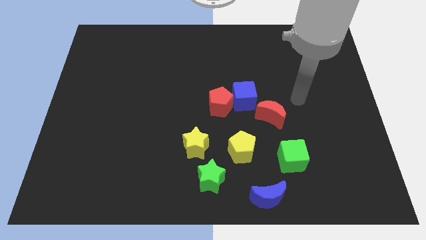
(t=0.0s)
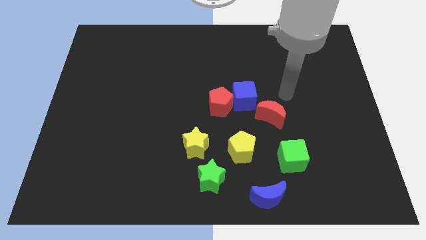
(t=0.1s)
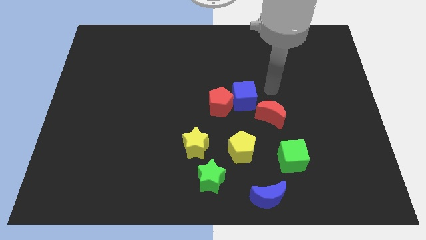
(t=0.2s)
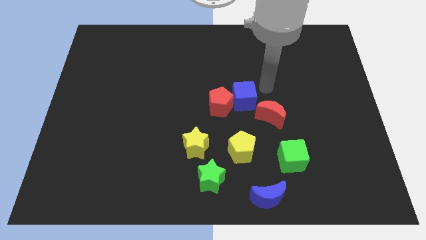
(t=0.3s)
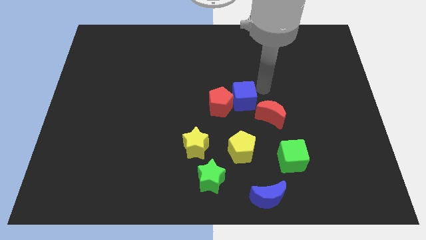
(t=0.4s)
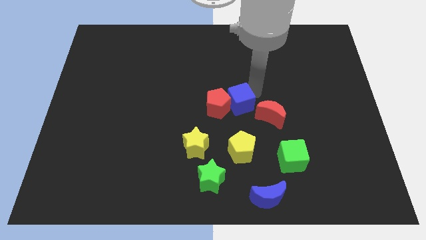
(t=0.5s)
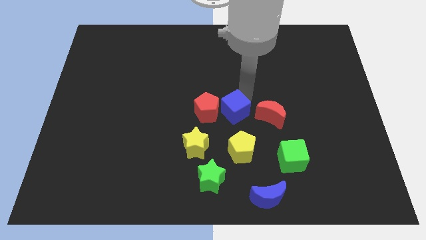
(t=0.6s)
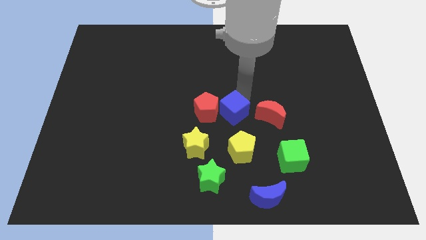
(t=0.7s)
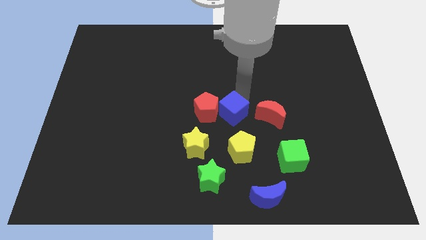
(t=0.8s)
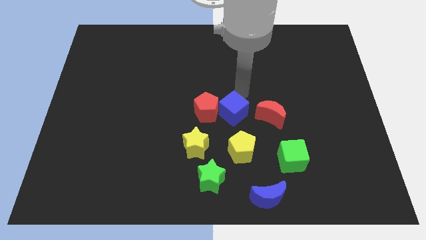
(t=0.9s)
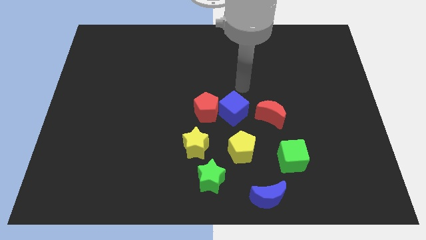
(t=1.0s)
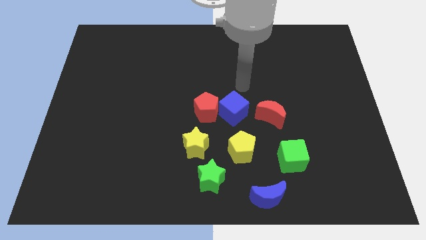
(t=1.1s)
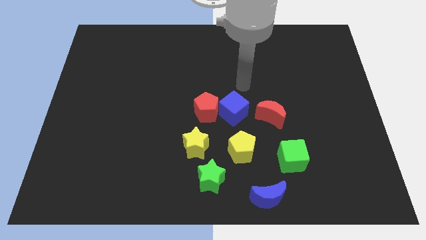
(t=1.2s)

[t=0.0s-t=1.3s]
slightly push the blue cube into the right side of the red pentagon

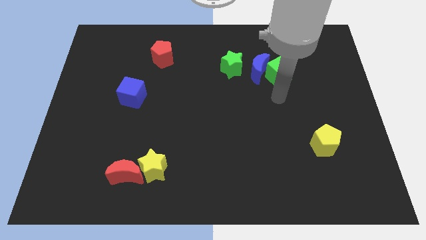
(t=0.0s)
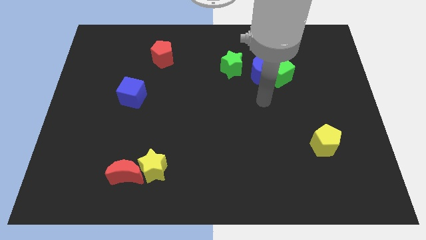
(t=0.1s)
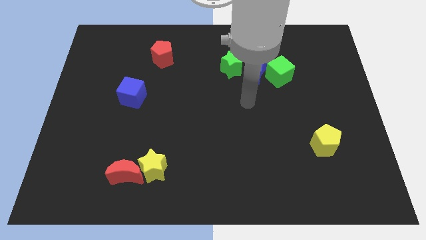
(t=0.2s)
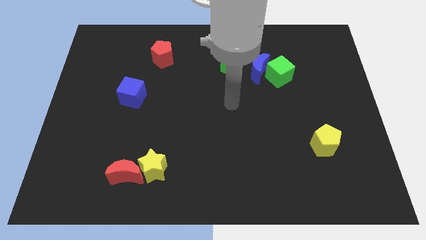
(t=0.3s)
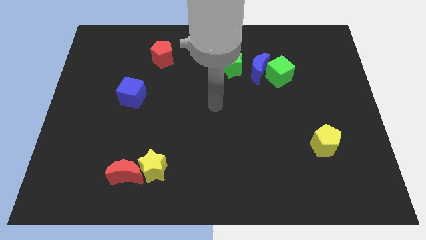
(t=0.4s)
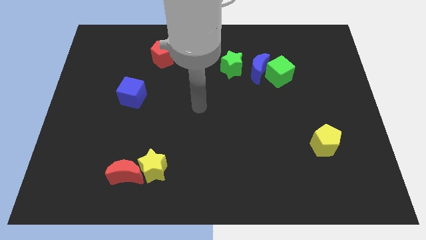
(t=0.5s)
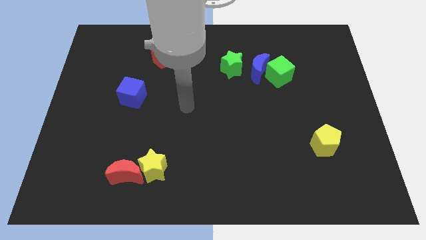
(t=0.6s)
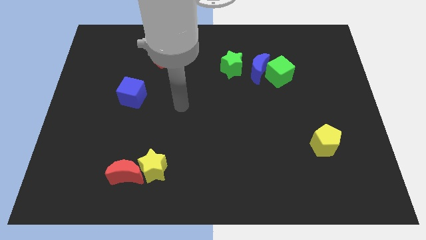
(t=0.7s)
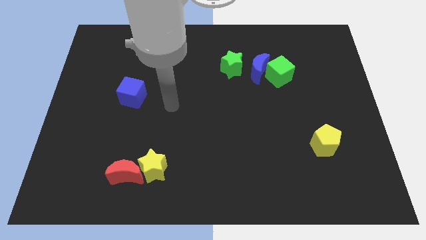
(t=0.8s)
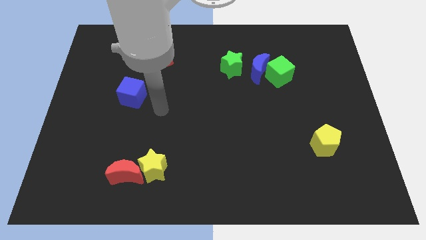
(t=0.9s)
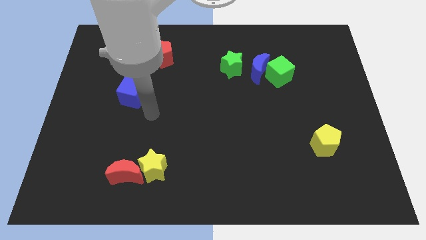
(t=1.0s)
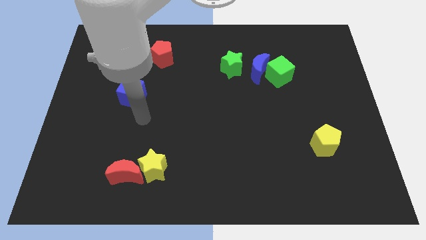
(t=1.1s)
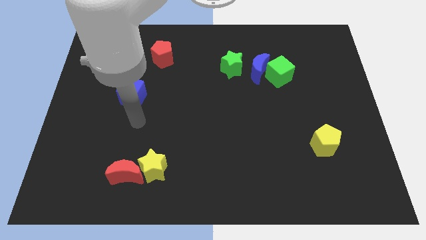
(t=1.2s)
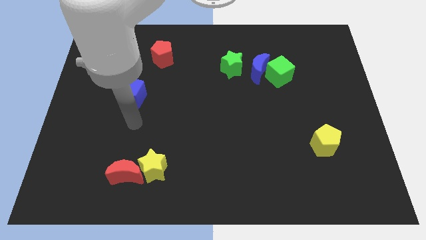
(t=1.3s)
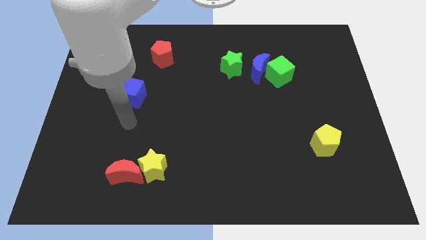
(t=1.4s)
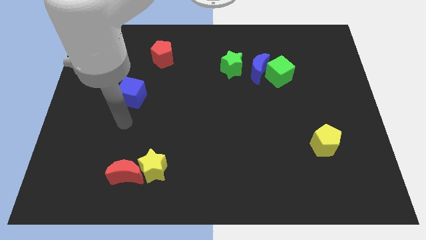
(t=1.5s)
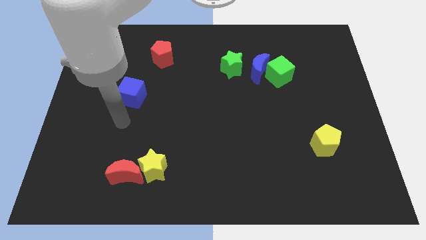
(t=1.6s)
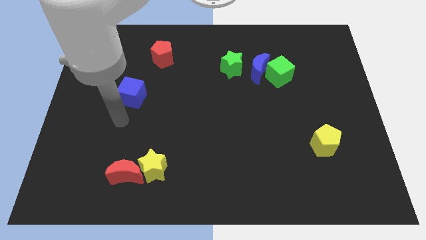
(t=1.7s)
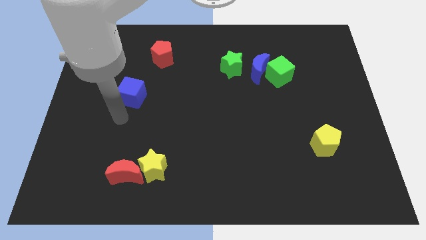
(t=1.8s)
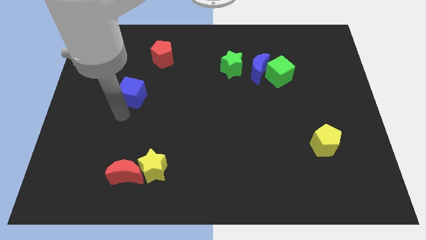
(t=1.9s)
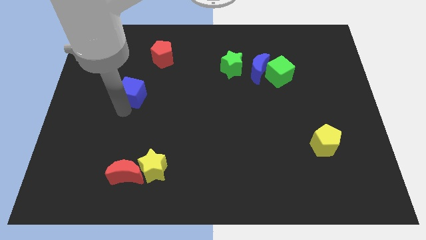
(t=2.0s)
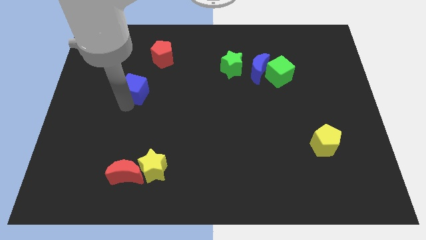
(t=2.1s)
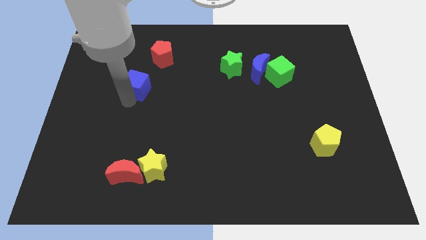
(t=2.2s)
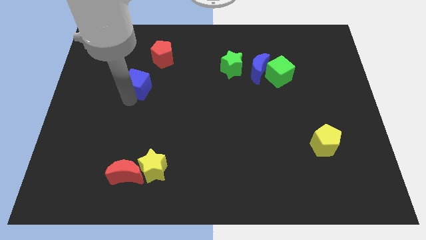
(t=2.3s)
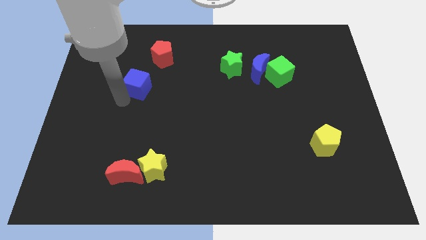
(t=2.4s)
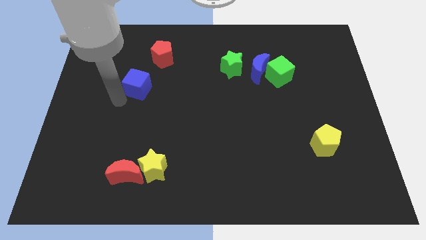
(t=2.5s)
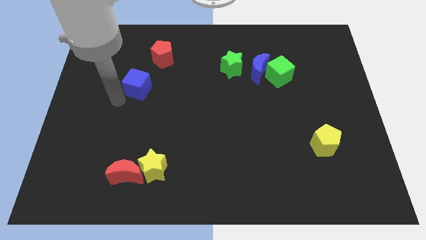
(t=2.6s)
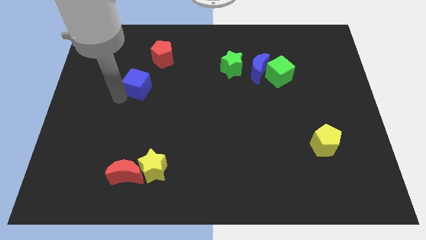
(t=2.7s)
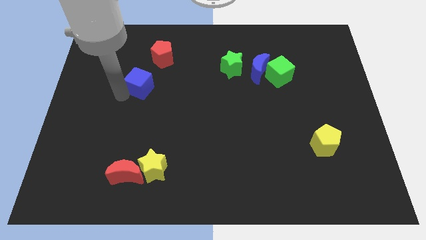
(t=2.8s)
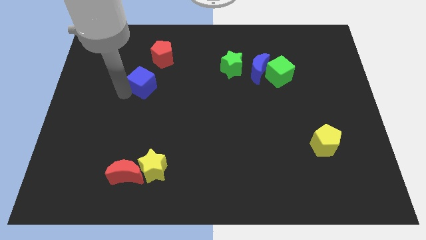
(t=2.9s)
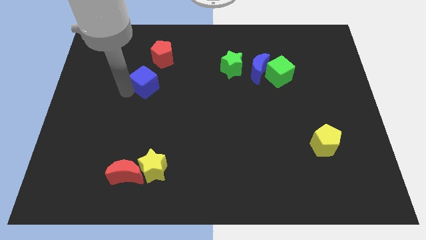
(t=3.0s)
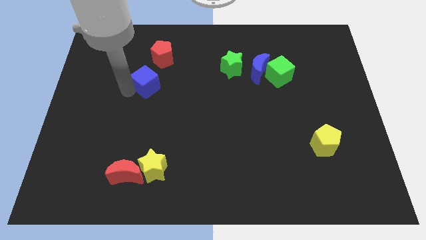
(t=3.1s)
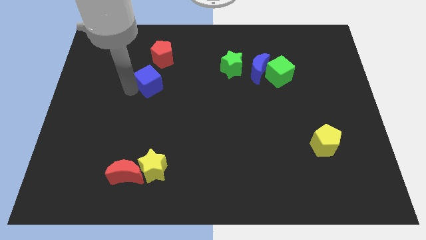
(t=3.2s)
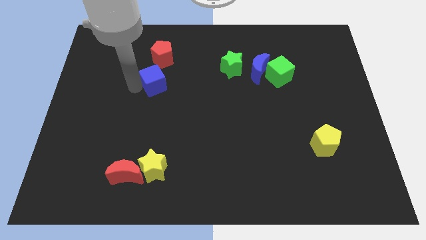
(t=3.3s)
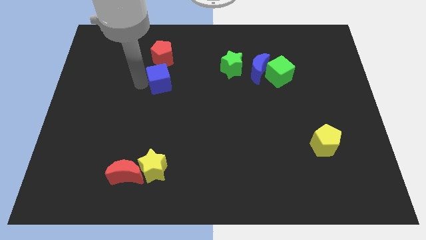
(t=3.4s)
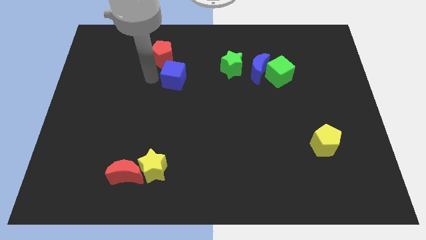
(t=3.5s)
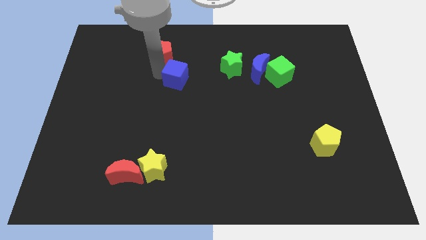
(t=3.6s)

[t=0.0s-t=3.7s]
push the blue cube slightly to the right

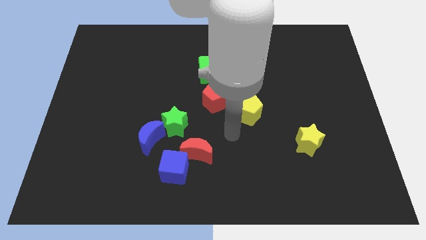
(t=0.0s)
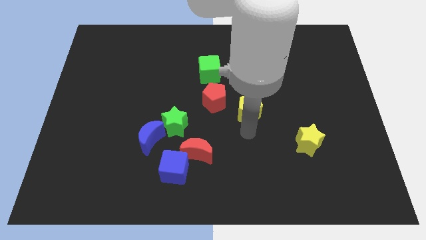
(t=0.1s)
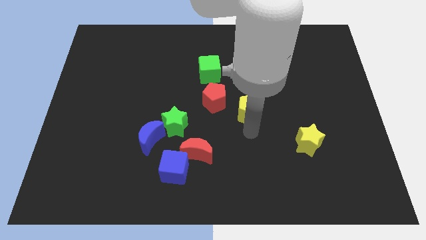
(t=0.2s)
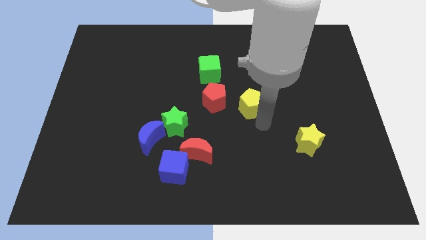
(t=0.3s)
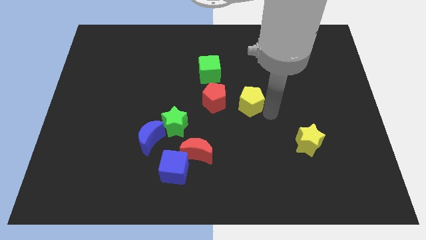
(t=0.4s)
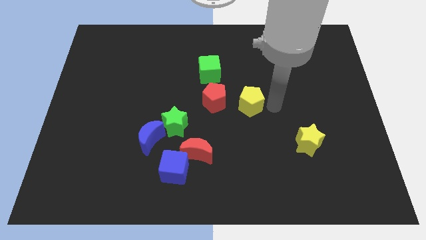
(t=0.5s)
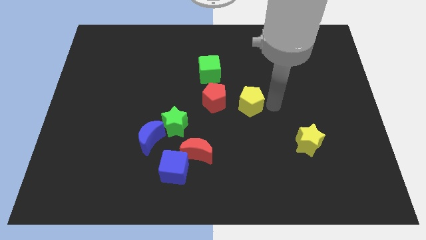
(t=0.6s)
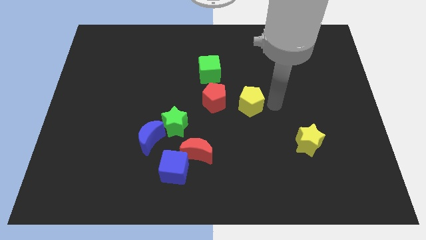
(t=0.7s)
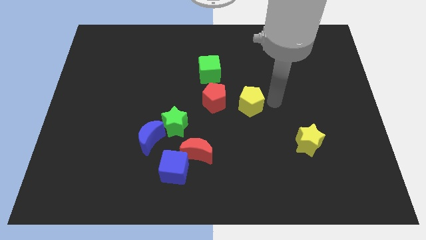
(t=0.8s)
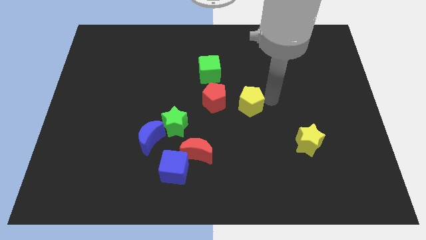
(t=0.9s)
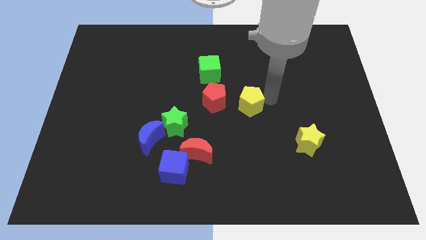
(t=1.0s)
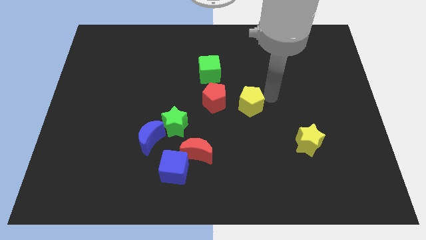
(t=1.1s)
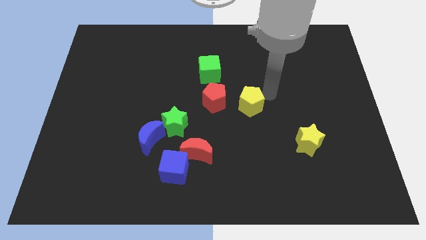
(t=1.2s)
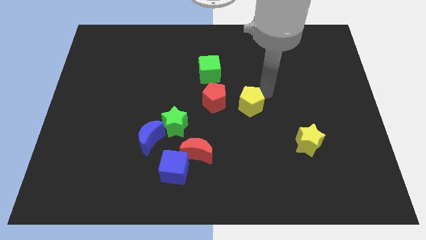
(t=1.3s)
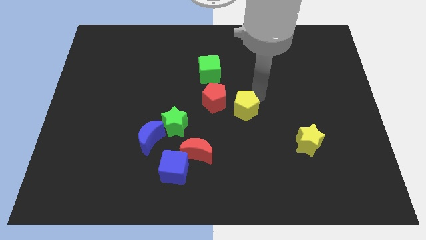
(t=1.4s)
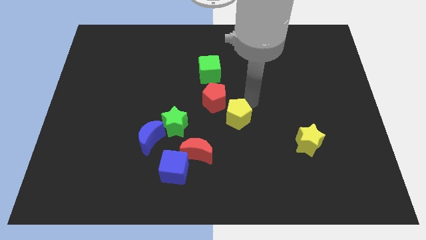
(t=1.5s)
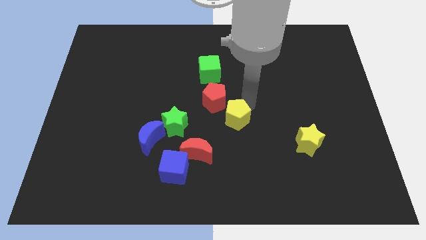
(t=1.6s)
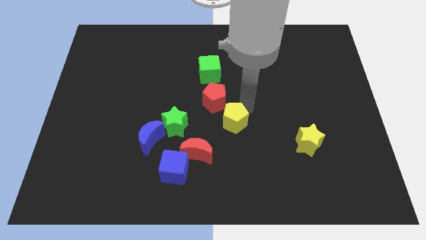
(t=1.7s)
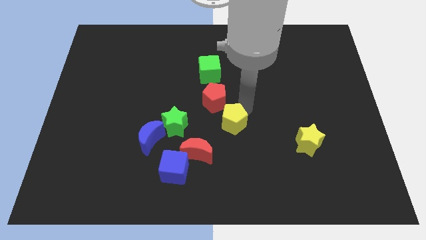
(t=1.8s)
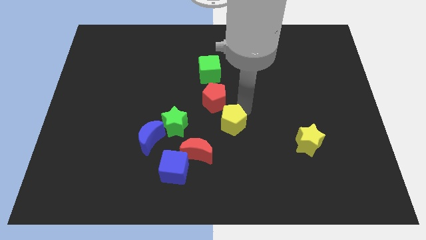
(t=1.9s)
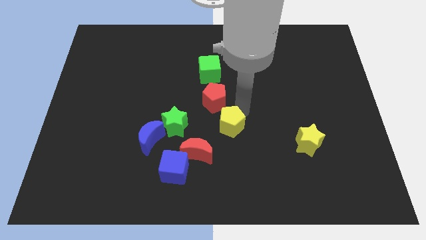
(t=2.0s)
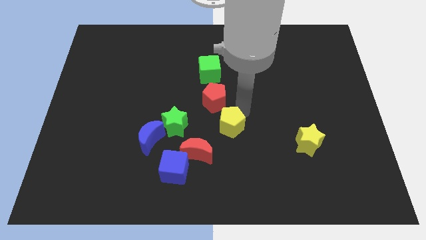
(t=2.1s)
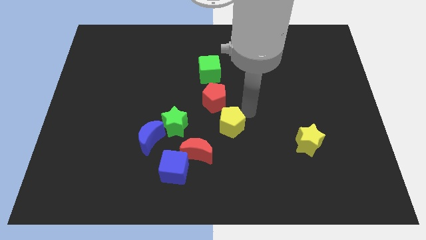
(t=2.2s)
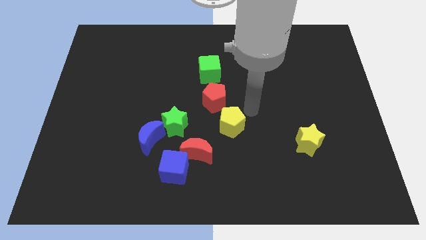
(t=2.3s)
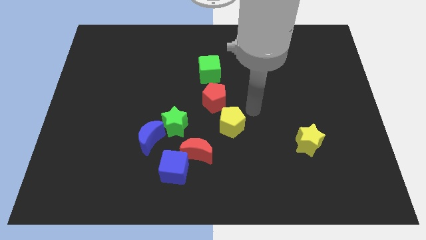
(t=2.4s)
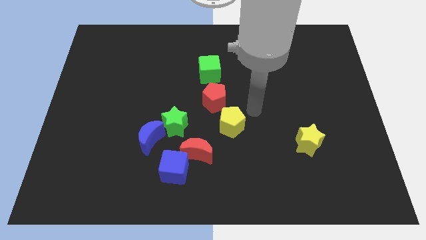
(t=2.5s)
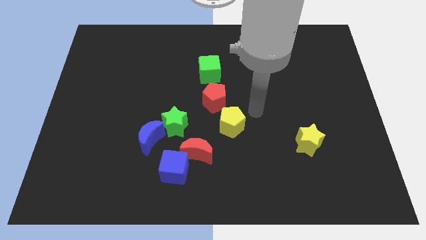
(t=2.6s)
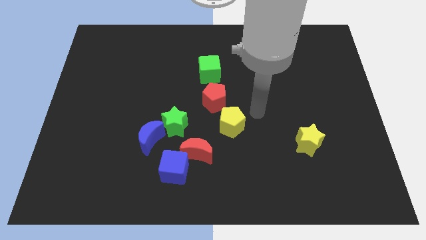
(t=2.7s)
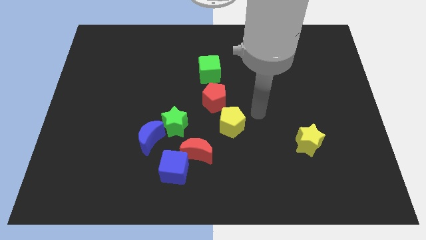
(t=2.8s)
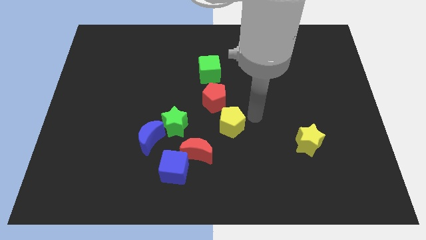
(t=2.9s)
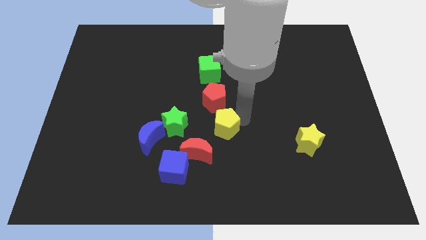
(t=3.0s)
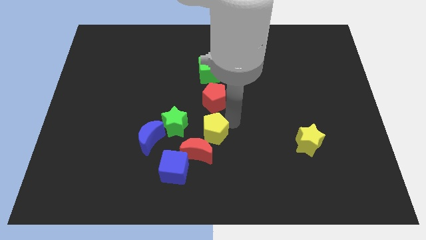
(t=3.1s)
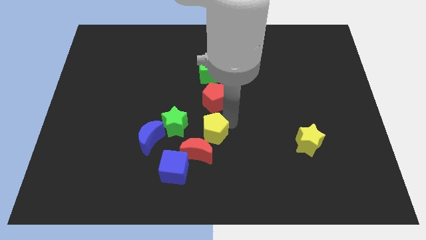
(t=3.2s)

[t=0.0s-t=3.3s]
push yellow pentagon below red pentagon

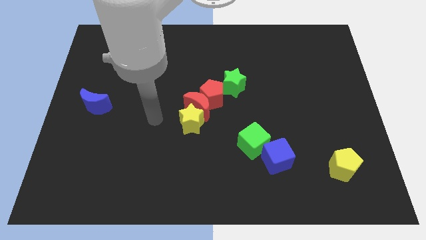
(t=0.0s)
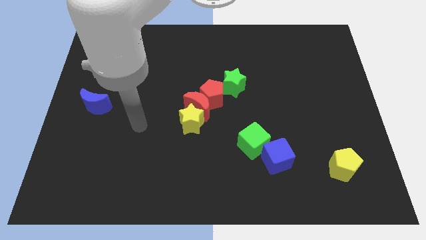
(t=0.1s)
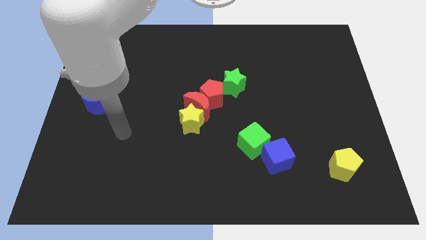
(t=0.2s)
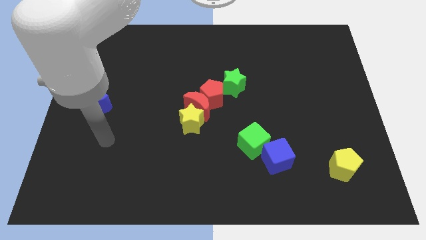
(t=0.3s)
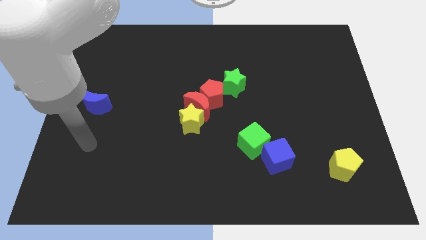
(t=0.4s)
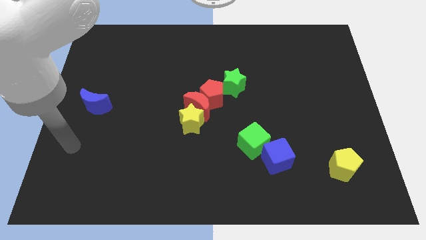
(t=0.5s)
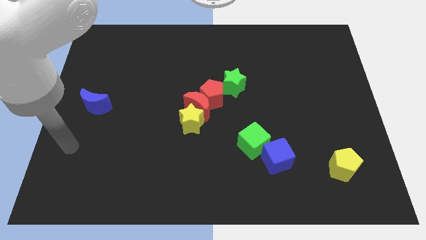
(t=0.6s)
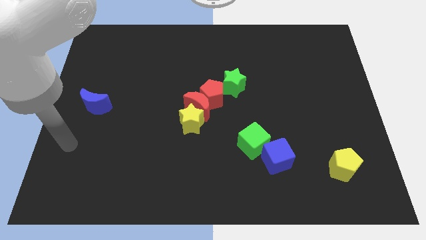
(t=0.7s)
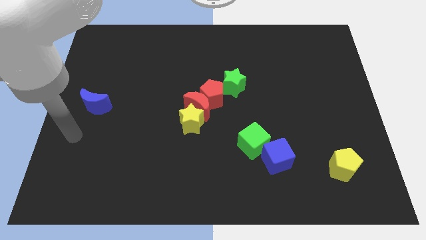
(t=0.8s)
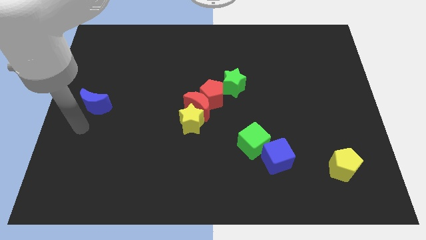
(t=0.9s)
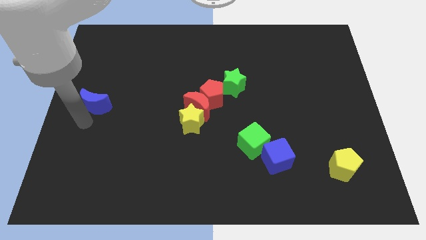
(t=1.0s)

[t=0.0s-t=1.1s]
move your hand below the blue moon
